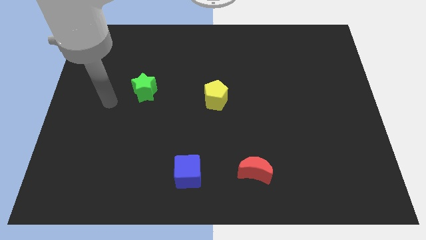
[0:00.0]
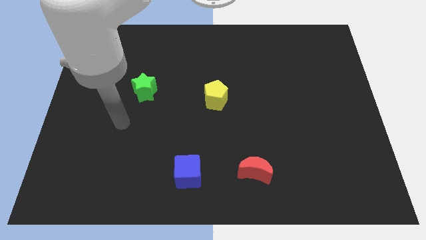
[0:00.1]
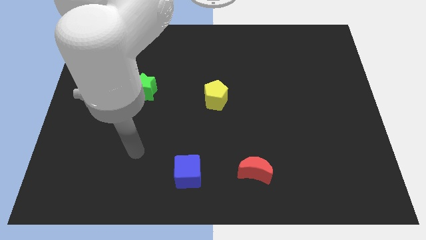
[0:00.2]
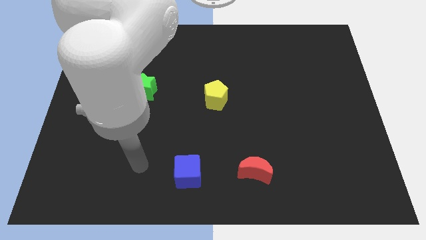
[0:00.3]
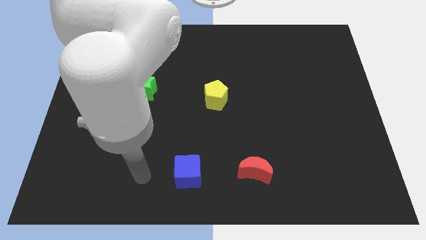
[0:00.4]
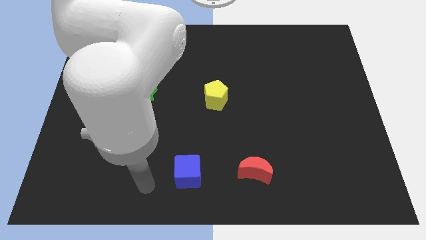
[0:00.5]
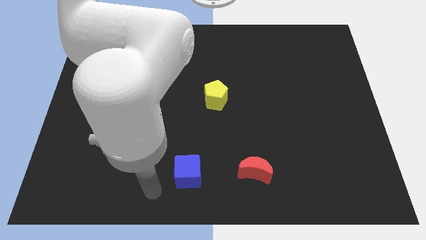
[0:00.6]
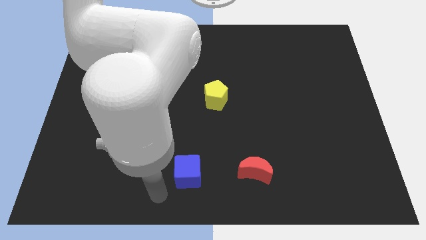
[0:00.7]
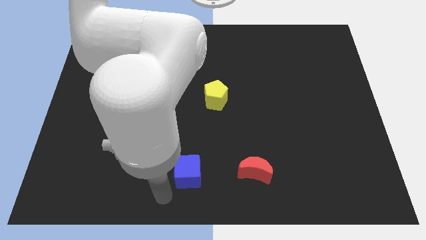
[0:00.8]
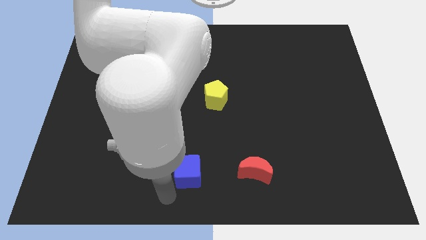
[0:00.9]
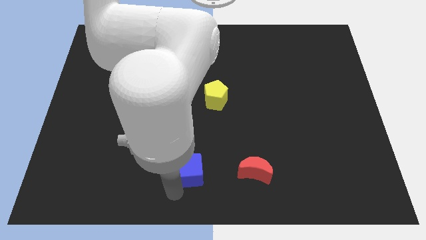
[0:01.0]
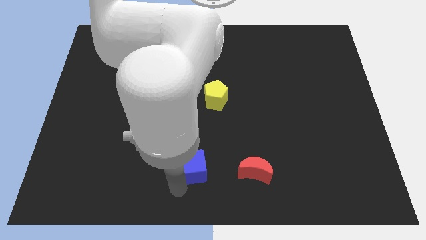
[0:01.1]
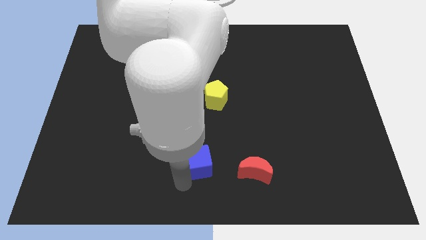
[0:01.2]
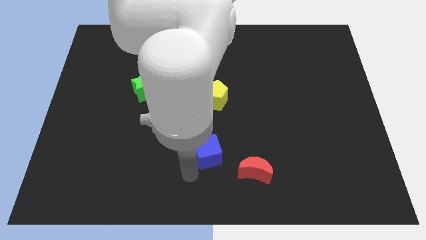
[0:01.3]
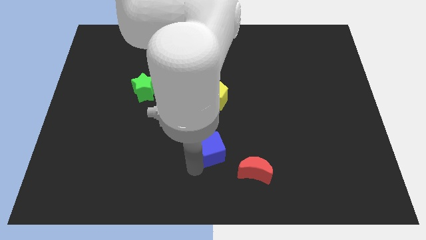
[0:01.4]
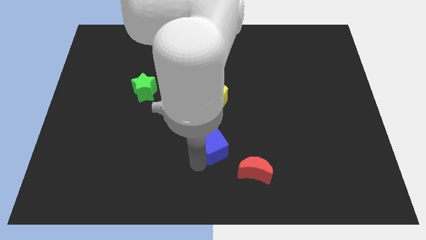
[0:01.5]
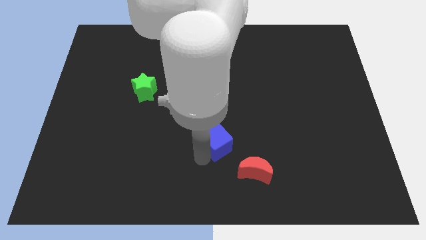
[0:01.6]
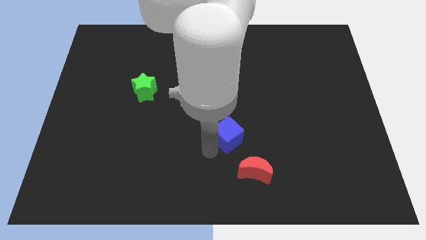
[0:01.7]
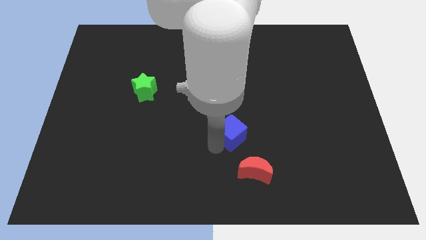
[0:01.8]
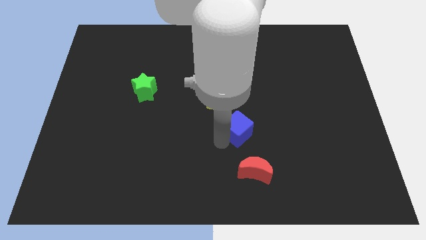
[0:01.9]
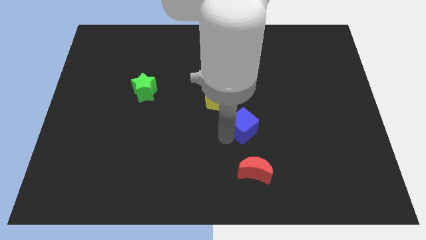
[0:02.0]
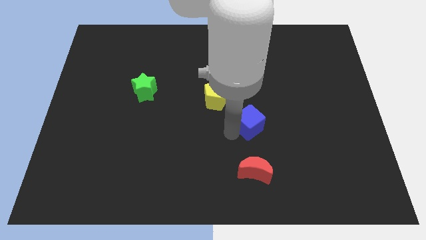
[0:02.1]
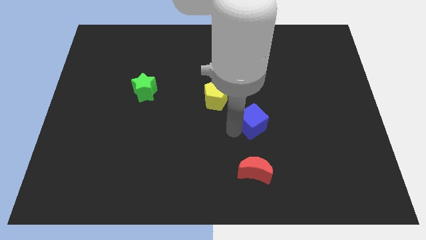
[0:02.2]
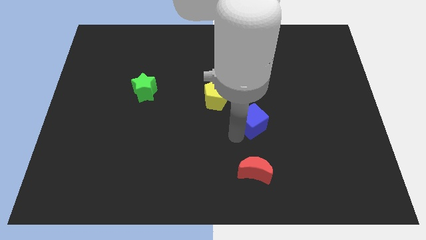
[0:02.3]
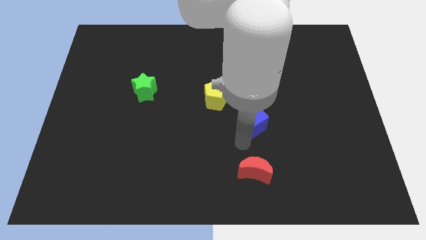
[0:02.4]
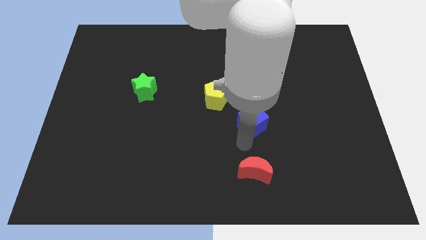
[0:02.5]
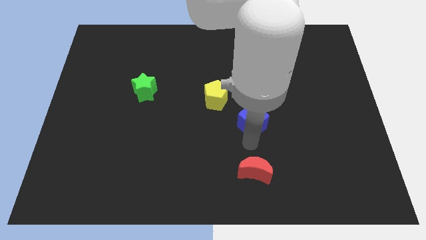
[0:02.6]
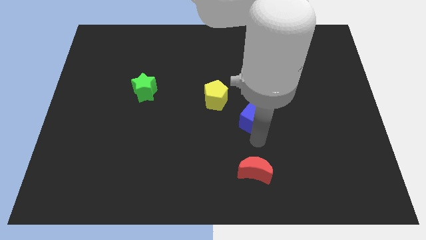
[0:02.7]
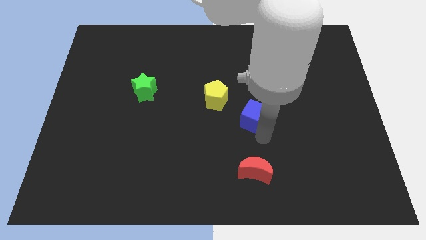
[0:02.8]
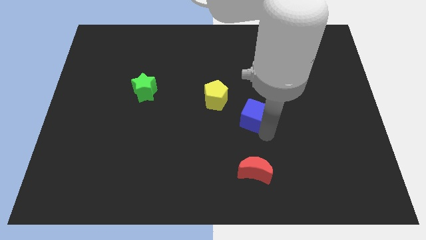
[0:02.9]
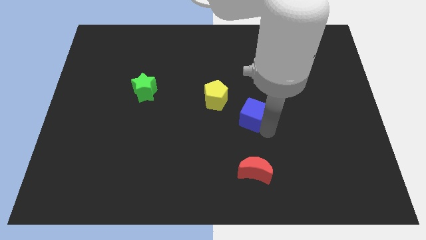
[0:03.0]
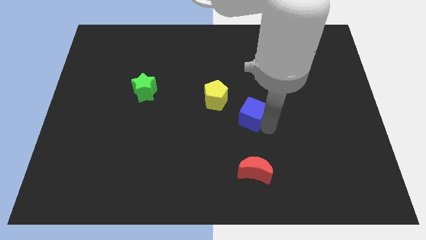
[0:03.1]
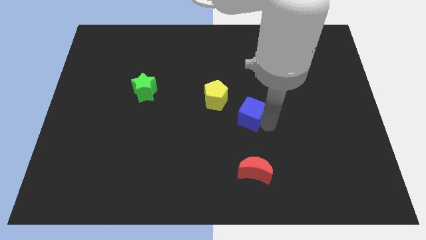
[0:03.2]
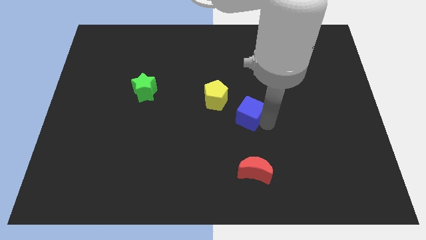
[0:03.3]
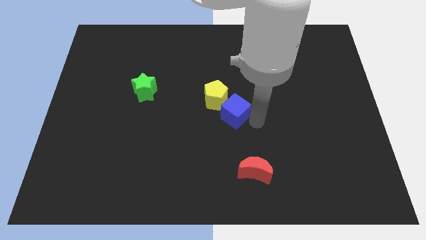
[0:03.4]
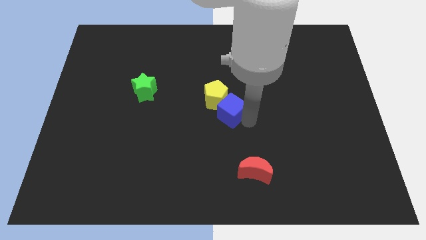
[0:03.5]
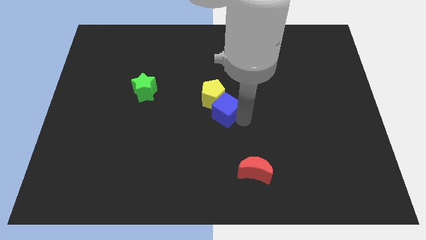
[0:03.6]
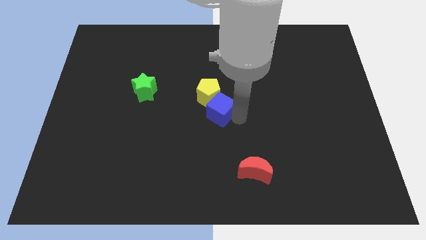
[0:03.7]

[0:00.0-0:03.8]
slide the cube to the pentagon

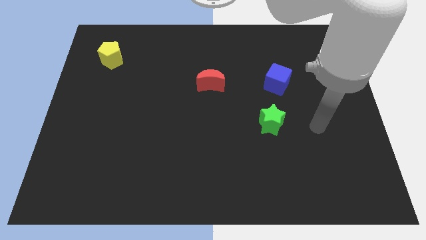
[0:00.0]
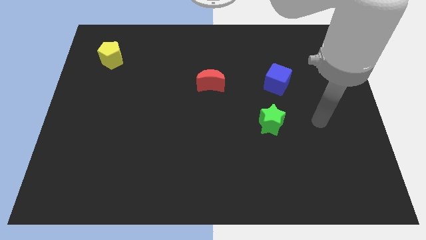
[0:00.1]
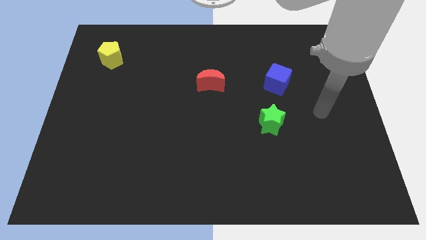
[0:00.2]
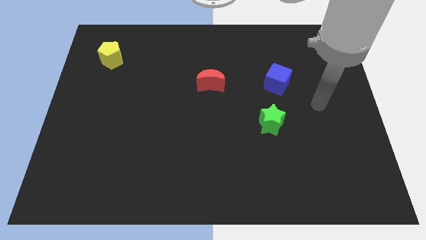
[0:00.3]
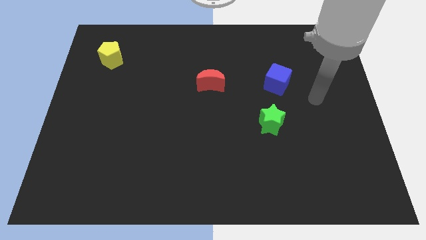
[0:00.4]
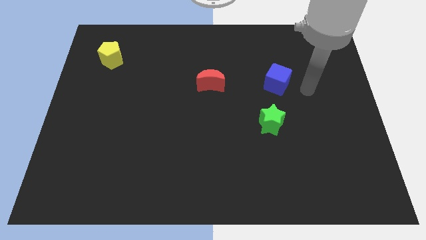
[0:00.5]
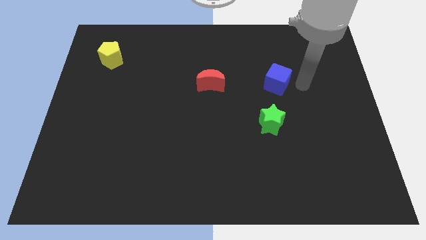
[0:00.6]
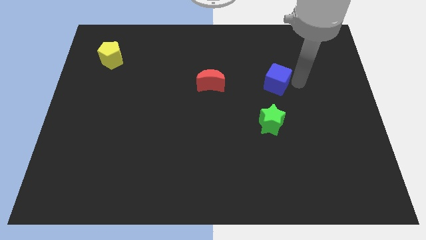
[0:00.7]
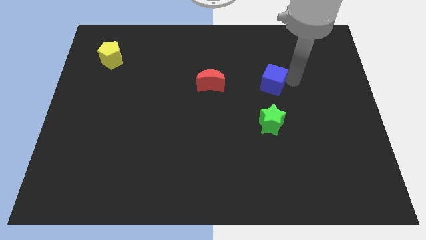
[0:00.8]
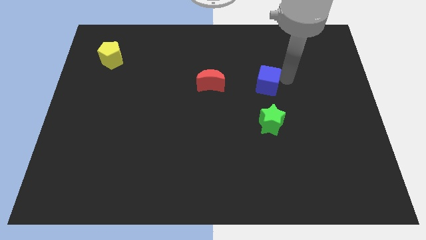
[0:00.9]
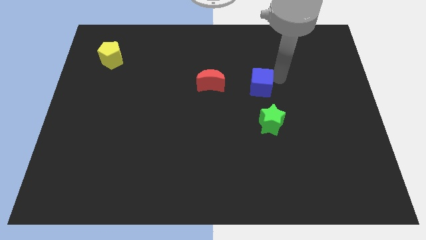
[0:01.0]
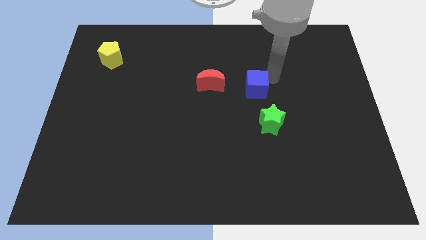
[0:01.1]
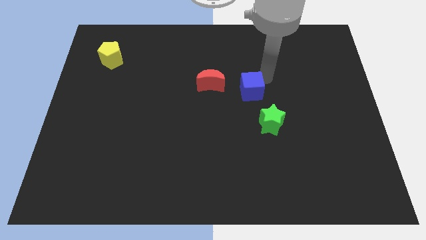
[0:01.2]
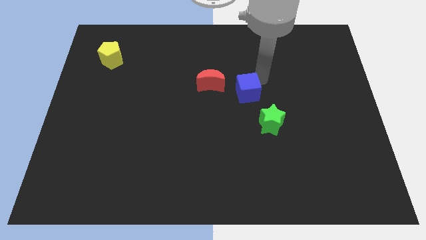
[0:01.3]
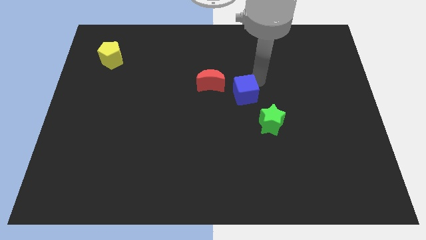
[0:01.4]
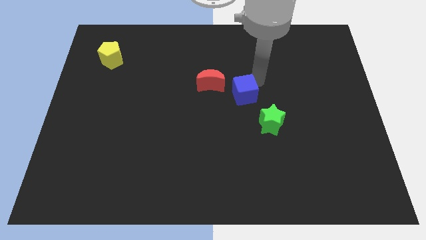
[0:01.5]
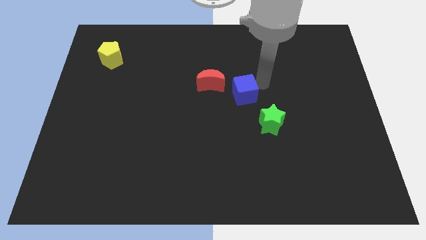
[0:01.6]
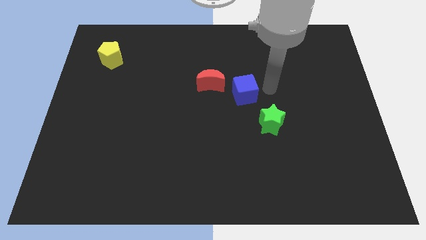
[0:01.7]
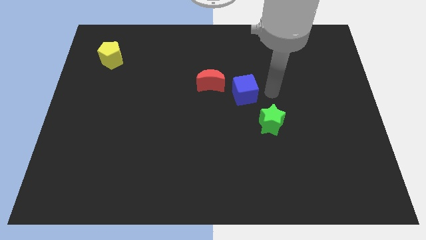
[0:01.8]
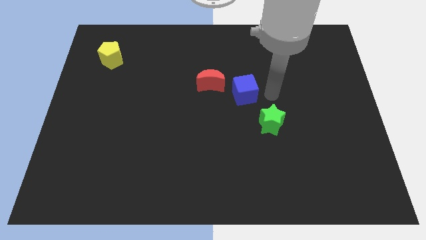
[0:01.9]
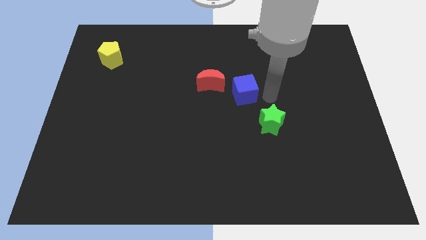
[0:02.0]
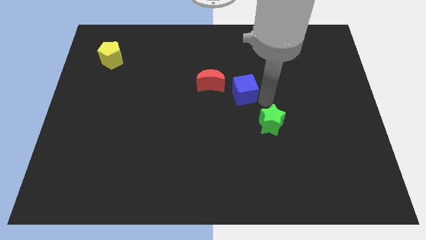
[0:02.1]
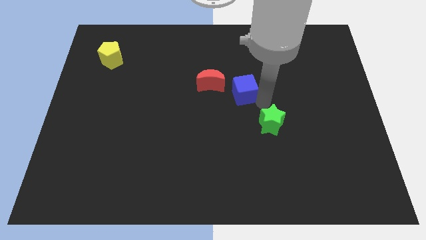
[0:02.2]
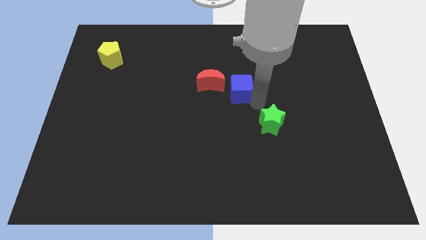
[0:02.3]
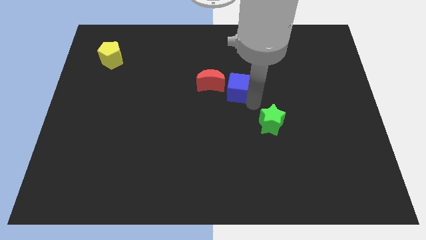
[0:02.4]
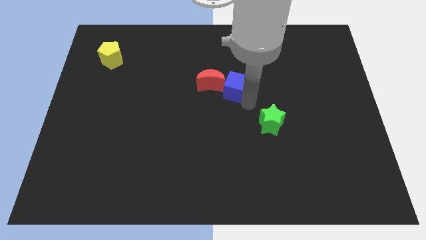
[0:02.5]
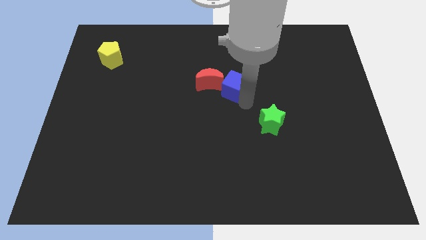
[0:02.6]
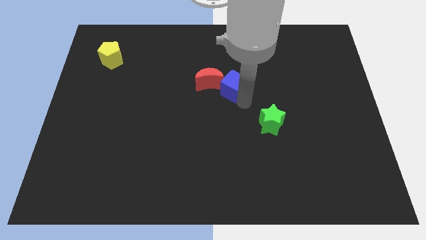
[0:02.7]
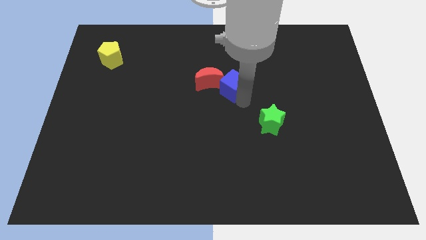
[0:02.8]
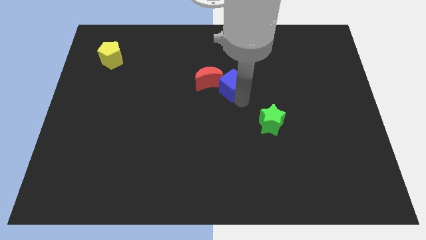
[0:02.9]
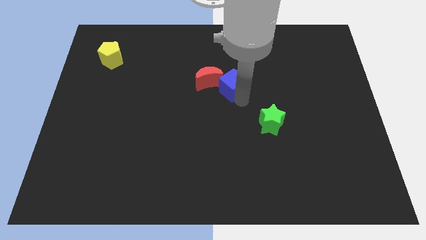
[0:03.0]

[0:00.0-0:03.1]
push the blue cube close to the red moon

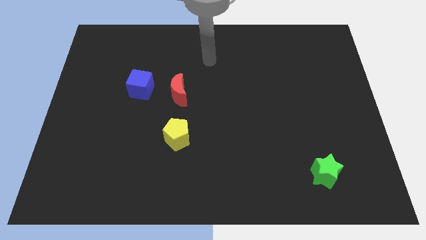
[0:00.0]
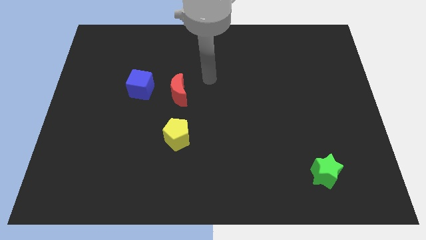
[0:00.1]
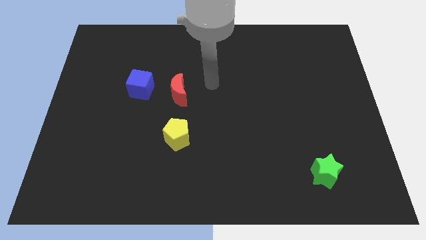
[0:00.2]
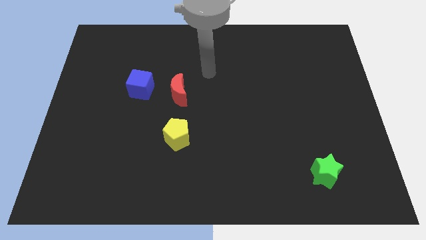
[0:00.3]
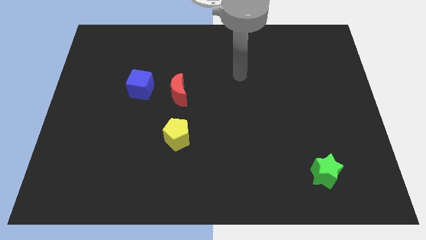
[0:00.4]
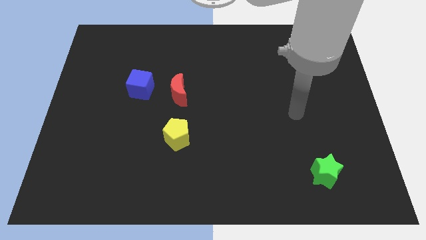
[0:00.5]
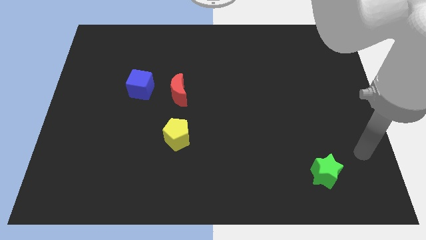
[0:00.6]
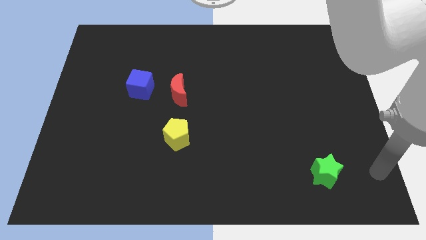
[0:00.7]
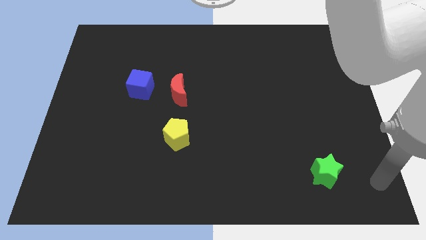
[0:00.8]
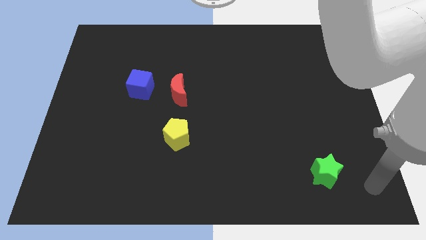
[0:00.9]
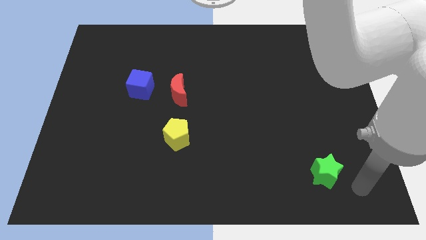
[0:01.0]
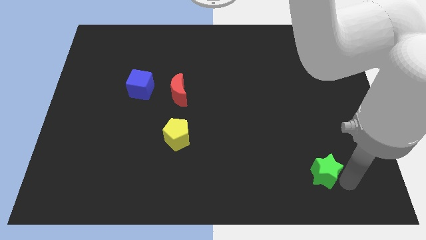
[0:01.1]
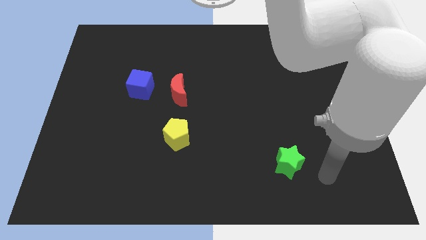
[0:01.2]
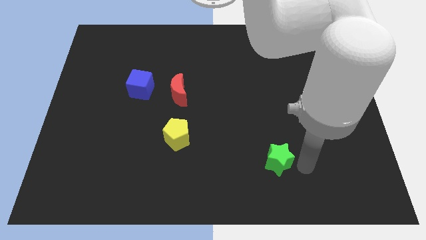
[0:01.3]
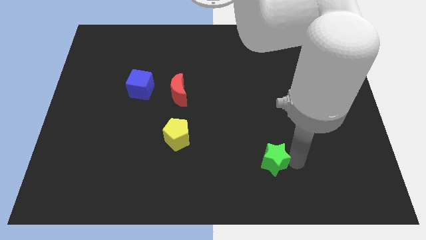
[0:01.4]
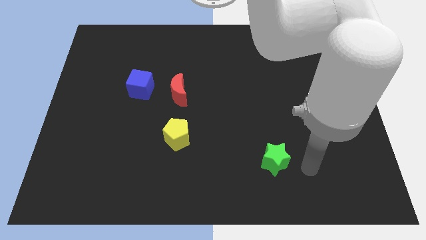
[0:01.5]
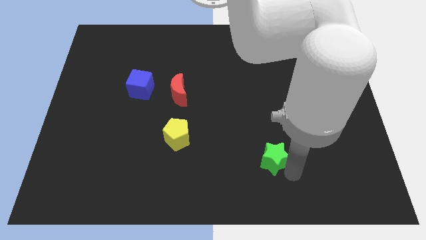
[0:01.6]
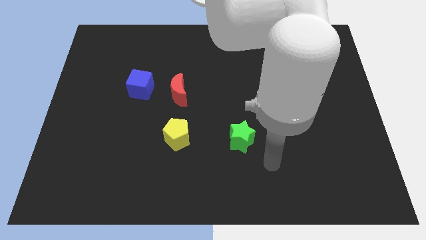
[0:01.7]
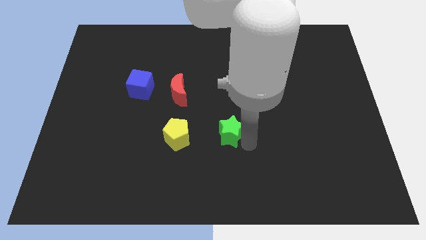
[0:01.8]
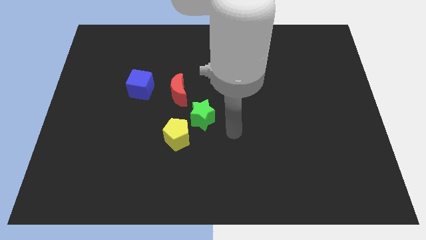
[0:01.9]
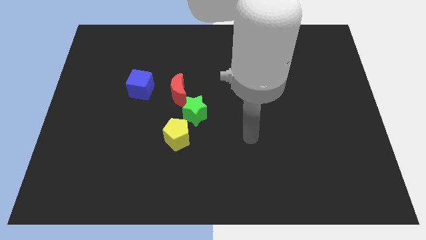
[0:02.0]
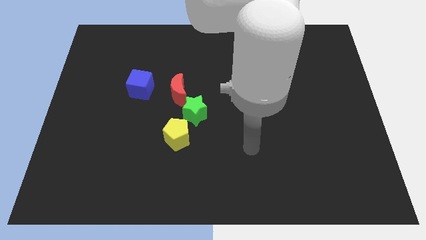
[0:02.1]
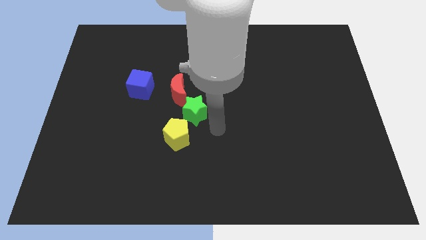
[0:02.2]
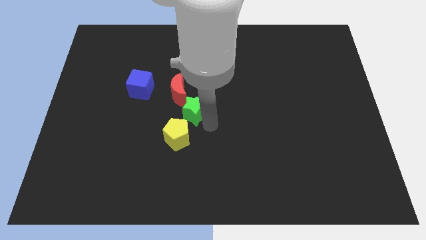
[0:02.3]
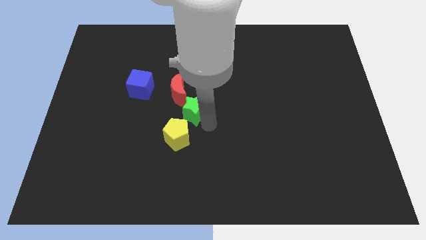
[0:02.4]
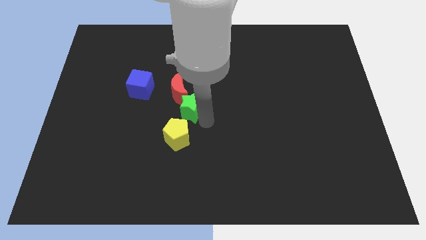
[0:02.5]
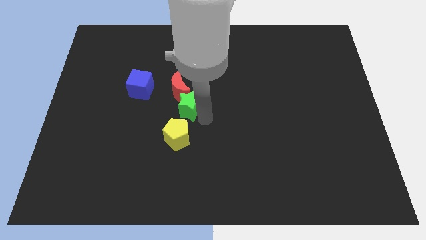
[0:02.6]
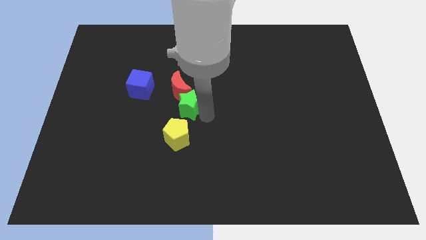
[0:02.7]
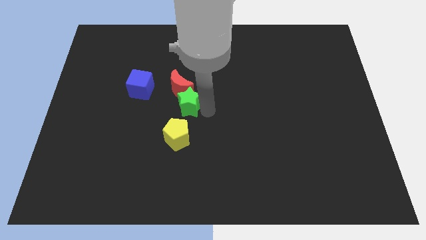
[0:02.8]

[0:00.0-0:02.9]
push the green star next to the red block
